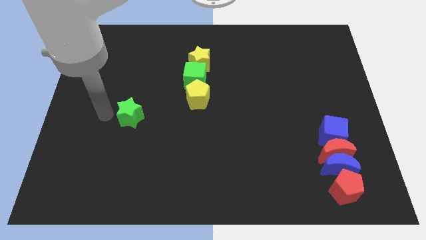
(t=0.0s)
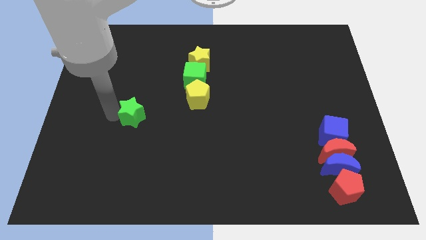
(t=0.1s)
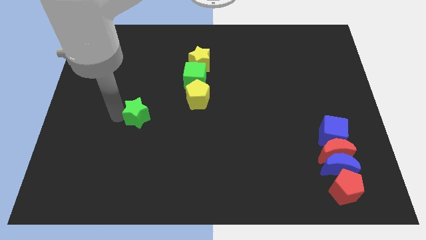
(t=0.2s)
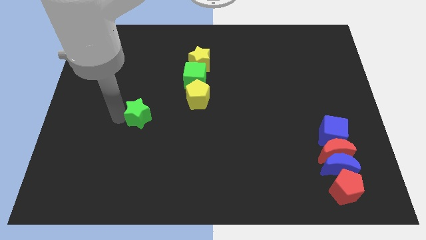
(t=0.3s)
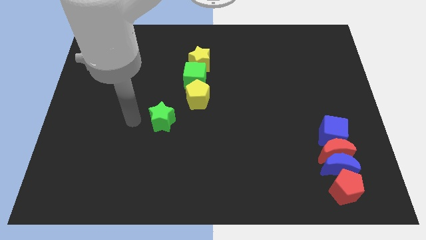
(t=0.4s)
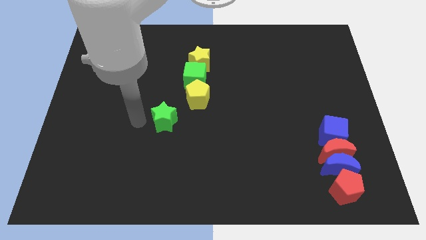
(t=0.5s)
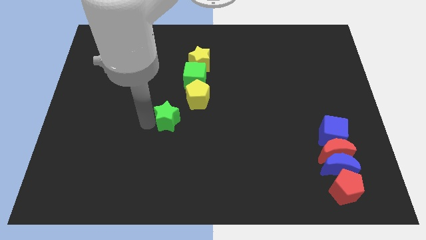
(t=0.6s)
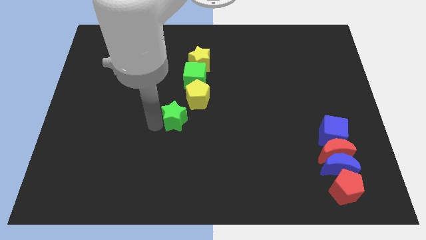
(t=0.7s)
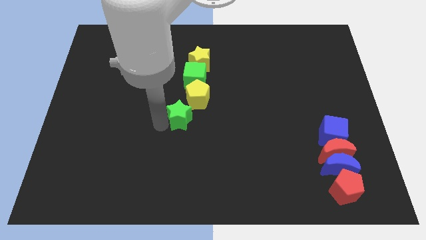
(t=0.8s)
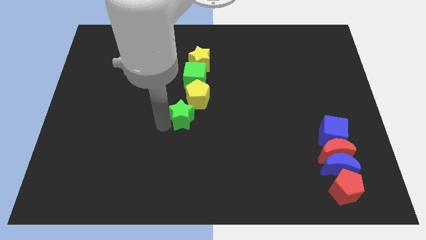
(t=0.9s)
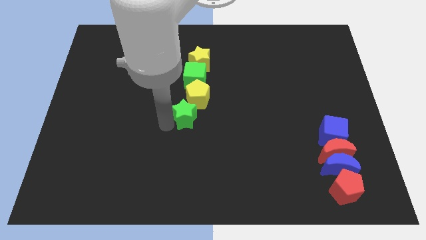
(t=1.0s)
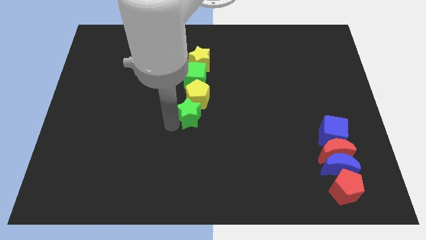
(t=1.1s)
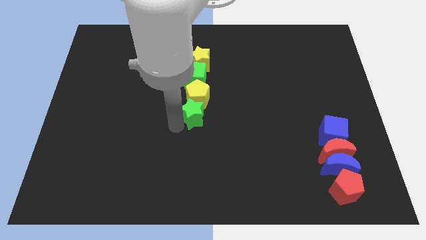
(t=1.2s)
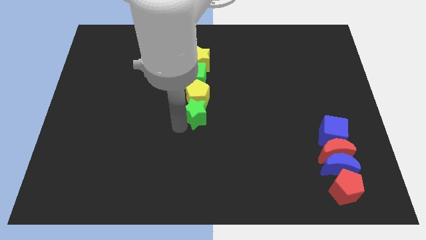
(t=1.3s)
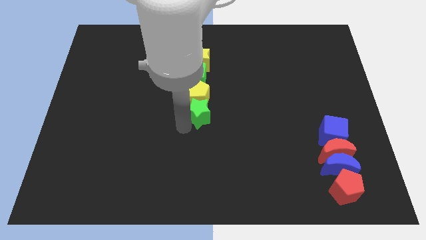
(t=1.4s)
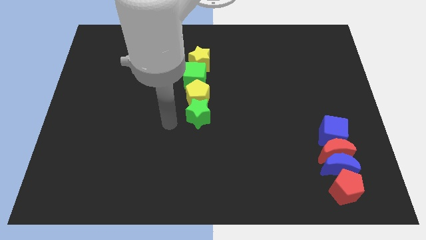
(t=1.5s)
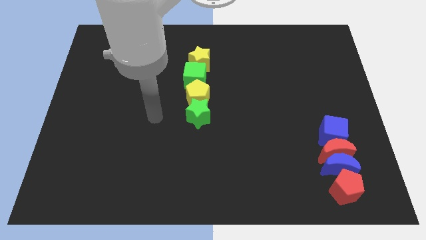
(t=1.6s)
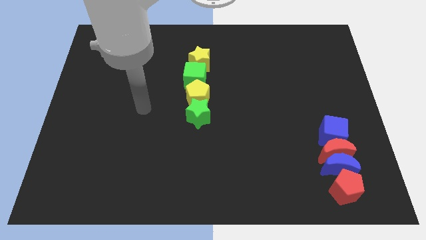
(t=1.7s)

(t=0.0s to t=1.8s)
place green star below the yellow pentagon

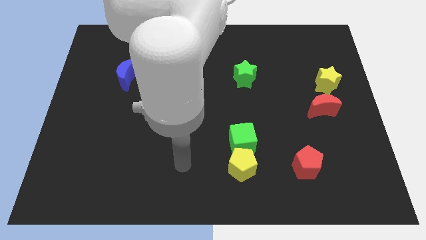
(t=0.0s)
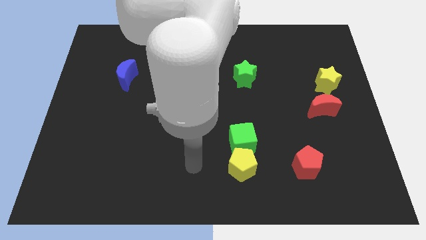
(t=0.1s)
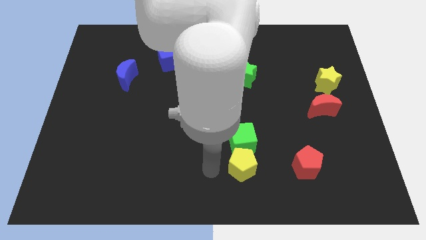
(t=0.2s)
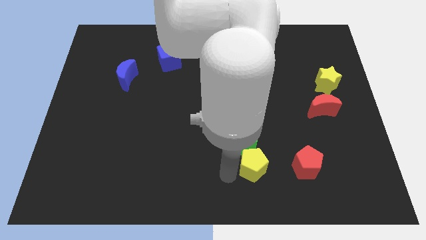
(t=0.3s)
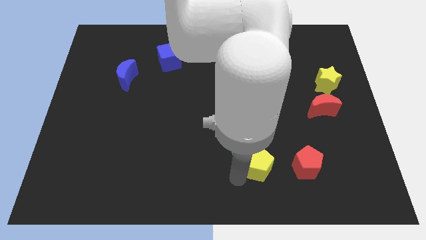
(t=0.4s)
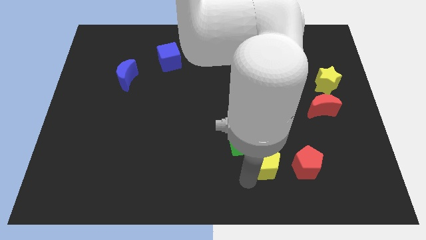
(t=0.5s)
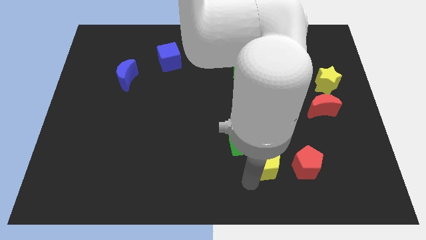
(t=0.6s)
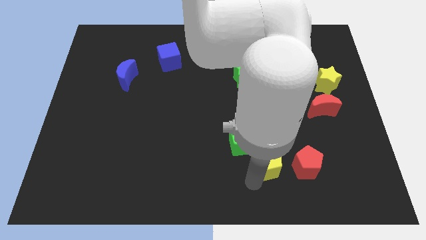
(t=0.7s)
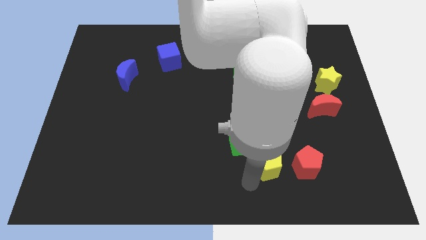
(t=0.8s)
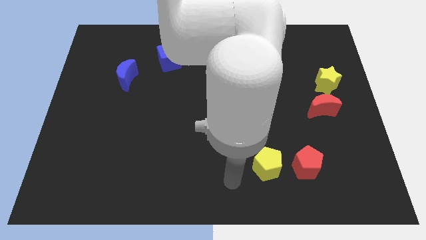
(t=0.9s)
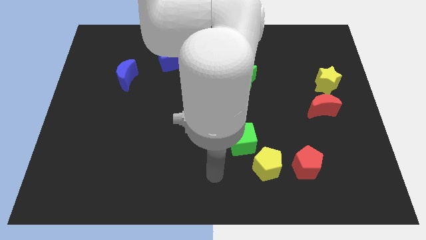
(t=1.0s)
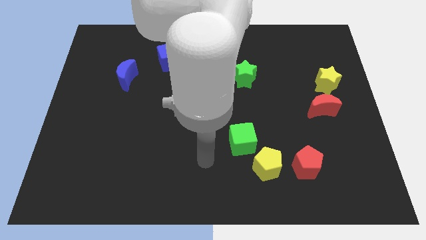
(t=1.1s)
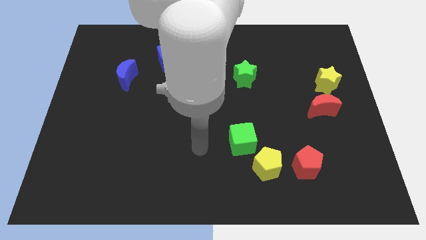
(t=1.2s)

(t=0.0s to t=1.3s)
move yellow pentagon to the left of red pentagon

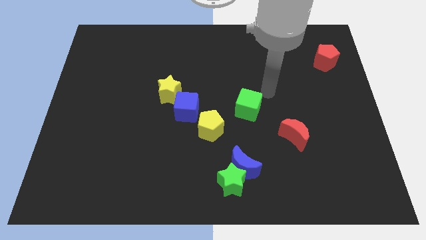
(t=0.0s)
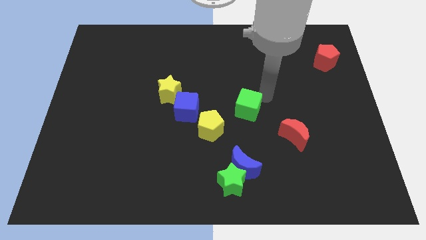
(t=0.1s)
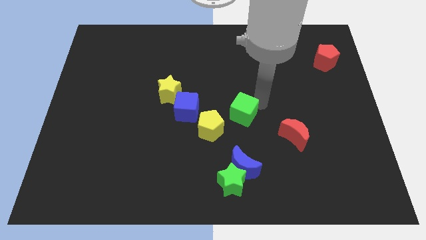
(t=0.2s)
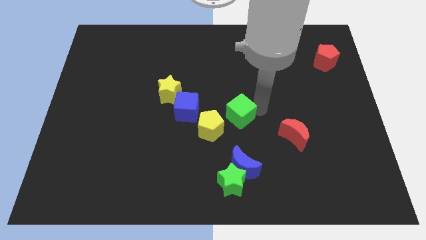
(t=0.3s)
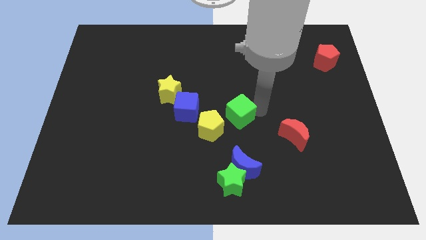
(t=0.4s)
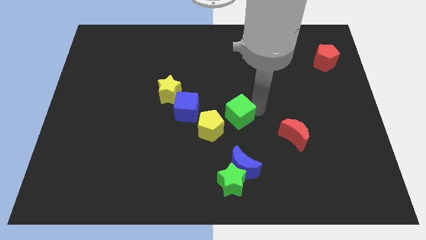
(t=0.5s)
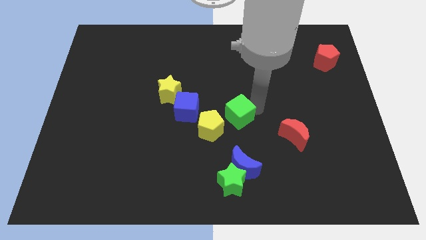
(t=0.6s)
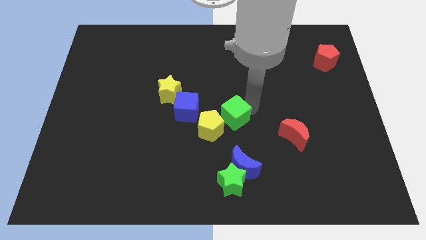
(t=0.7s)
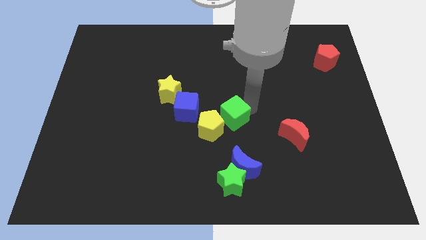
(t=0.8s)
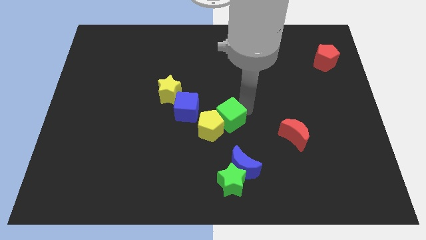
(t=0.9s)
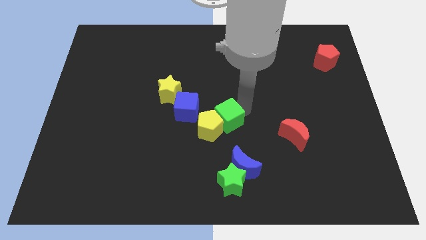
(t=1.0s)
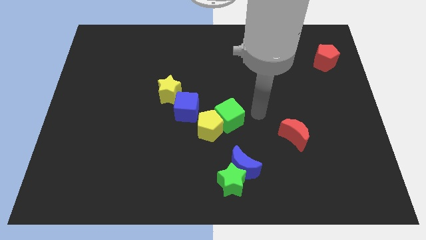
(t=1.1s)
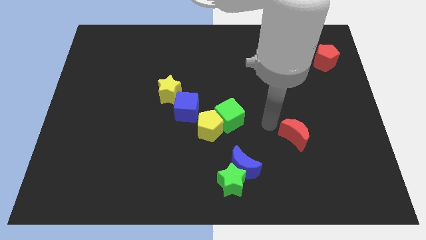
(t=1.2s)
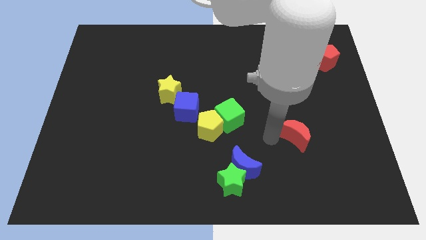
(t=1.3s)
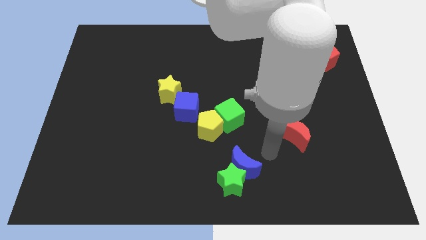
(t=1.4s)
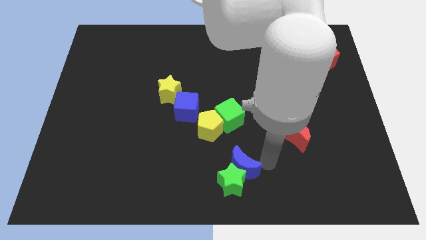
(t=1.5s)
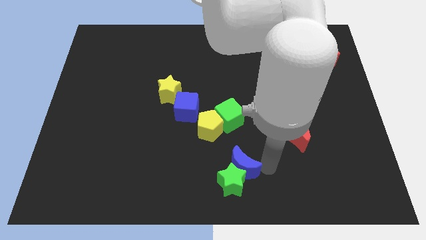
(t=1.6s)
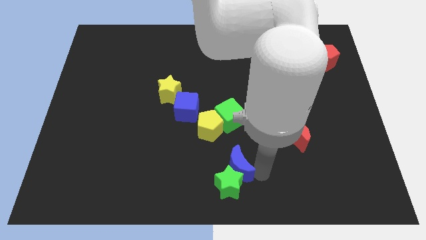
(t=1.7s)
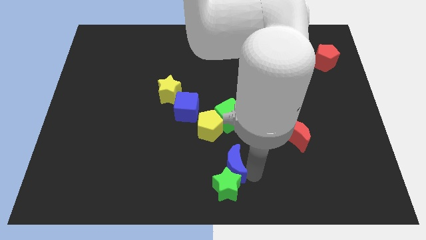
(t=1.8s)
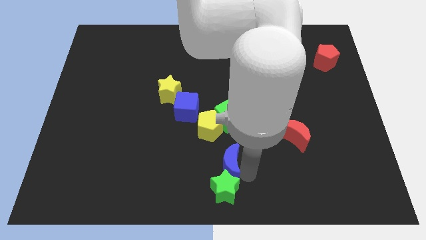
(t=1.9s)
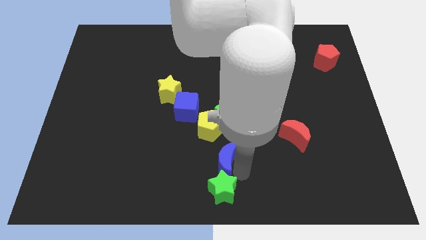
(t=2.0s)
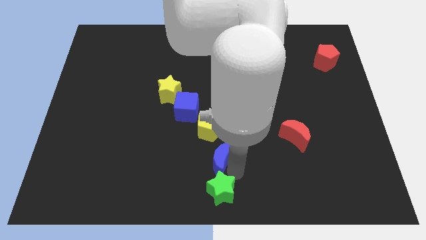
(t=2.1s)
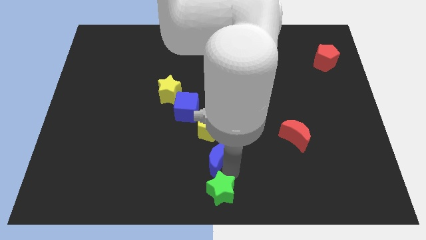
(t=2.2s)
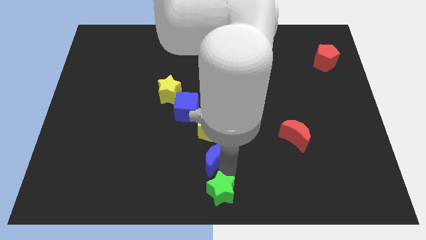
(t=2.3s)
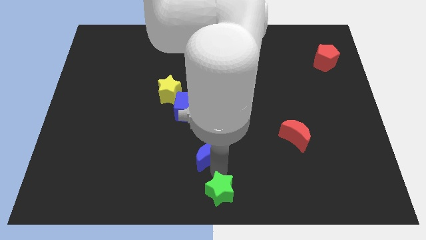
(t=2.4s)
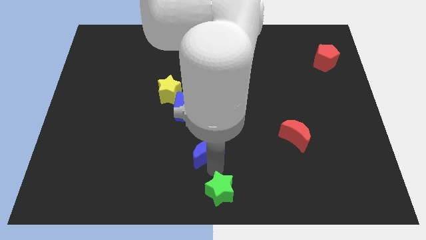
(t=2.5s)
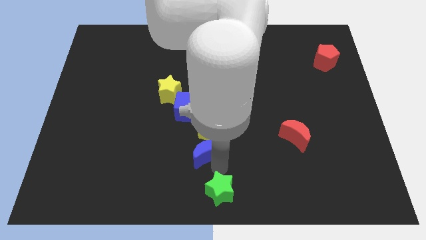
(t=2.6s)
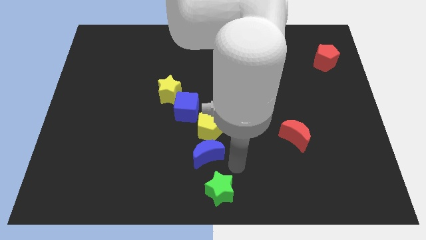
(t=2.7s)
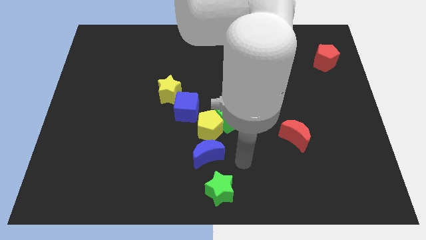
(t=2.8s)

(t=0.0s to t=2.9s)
separate the blue moon and green star

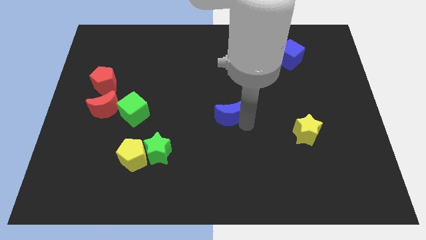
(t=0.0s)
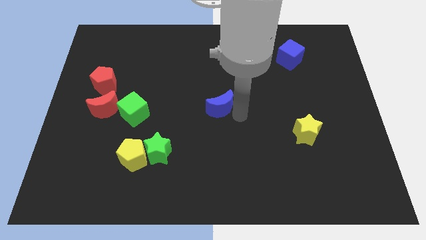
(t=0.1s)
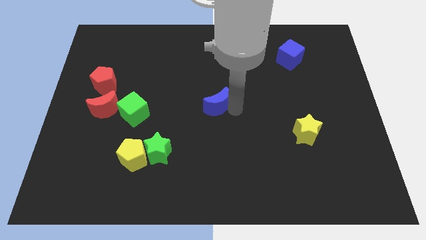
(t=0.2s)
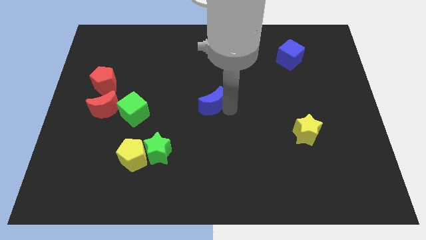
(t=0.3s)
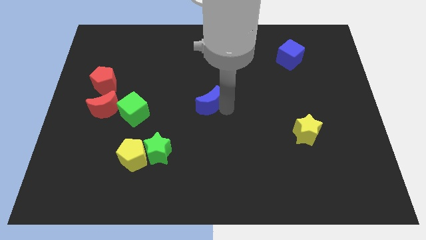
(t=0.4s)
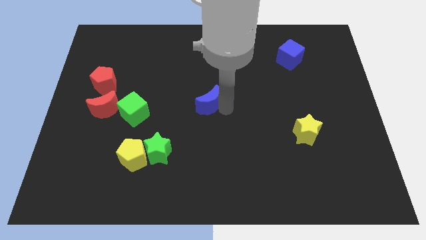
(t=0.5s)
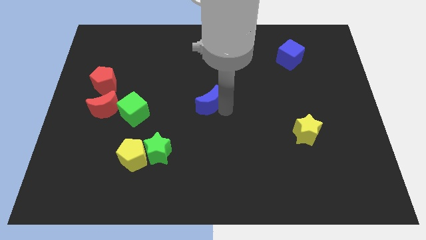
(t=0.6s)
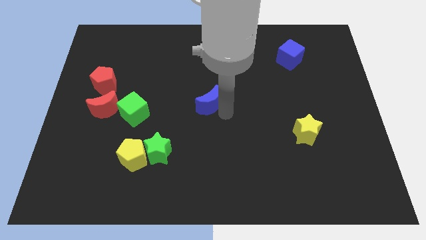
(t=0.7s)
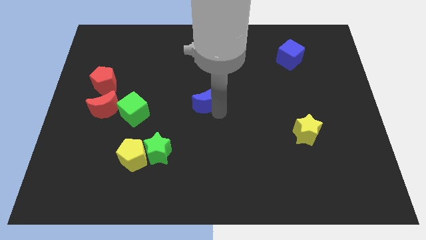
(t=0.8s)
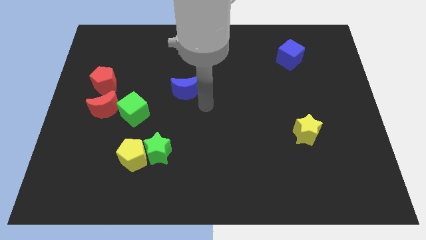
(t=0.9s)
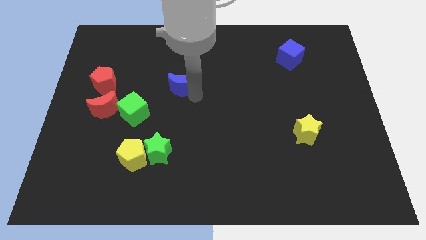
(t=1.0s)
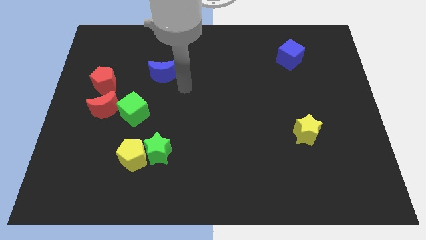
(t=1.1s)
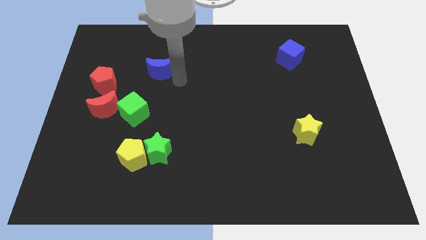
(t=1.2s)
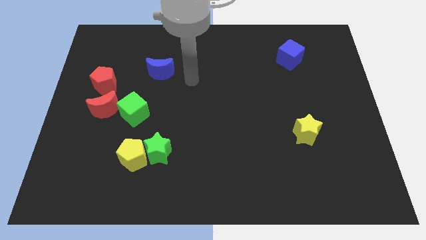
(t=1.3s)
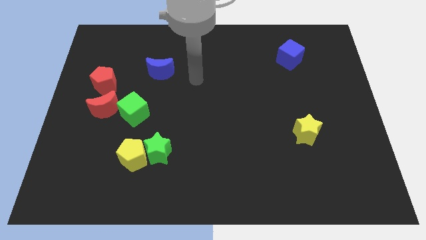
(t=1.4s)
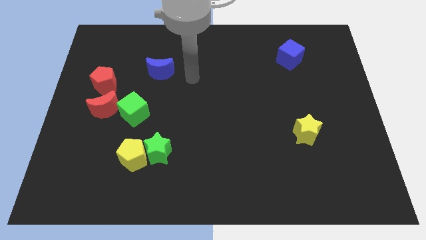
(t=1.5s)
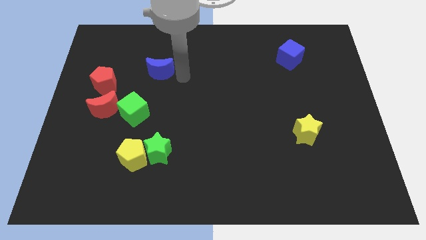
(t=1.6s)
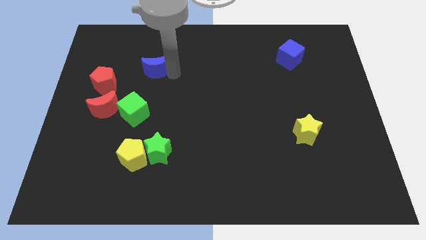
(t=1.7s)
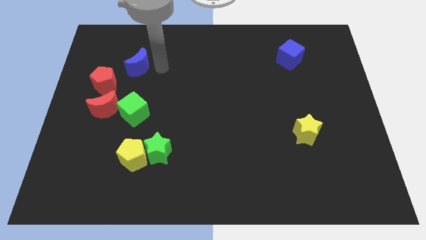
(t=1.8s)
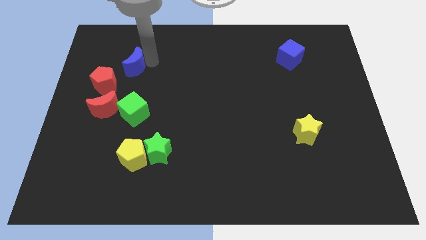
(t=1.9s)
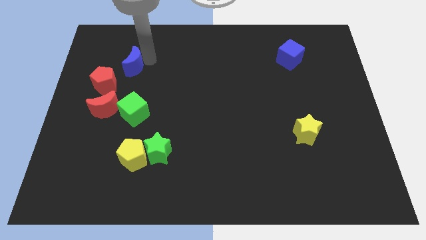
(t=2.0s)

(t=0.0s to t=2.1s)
push the blue moon vertically above the green cube

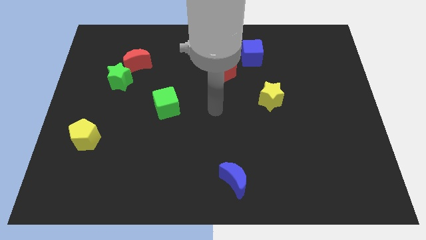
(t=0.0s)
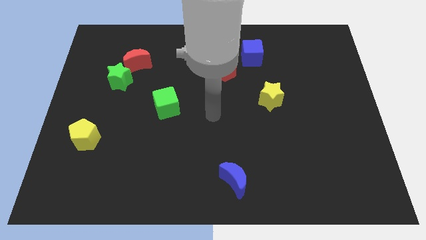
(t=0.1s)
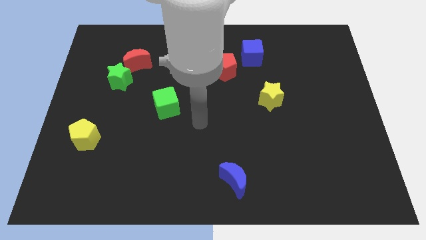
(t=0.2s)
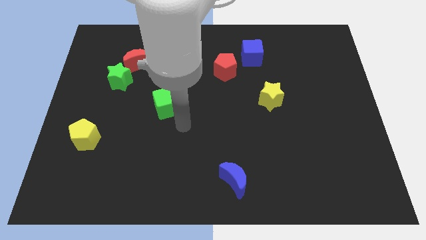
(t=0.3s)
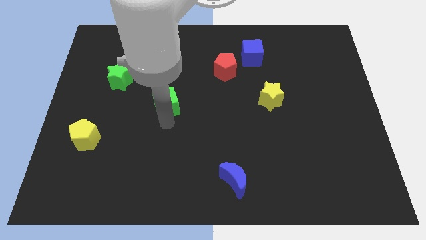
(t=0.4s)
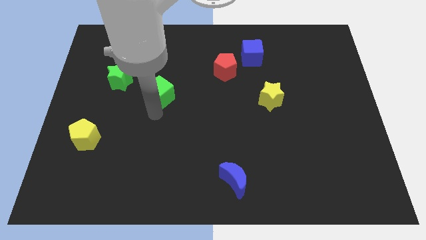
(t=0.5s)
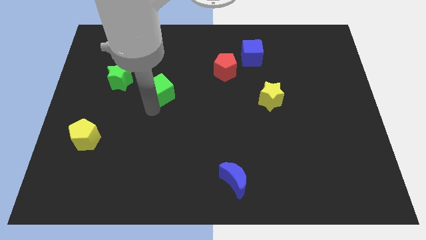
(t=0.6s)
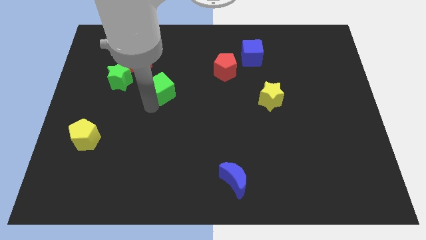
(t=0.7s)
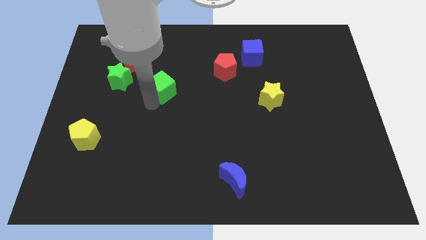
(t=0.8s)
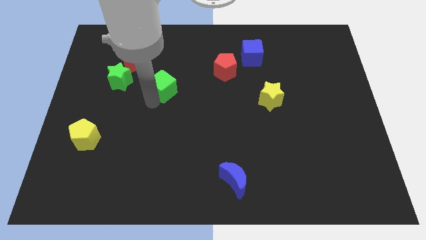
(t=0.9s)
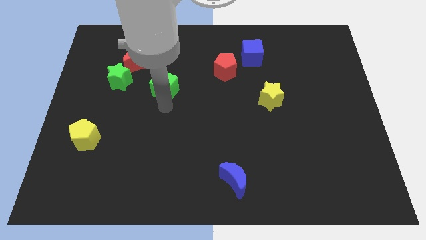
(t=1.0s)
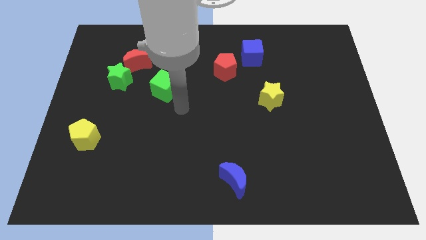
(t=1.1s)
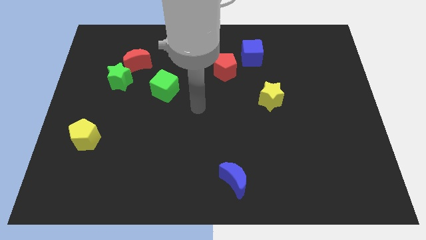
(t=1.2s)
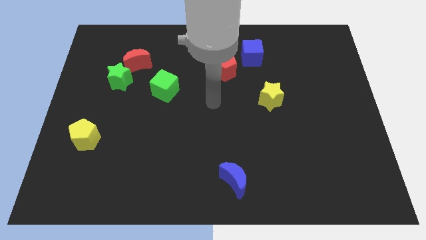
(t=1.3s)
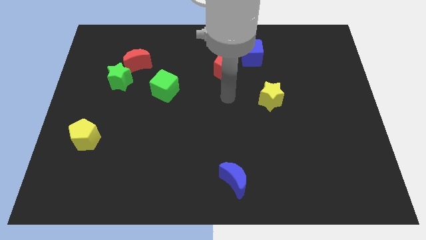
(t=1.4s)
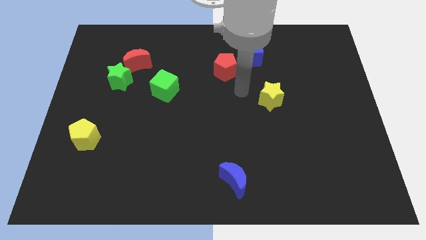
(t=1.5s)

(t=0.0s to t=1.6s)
place green cube to the right of green star
